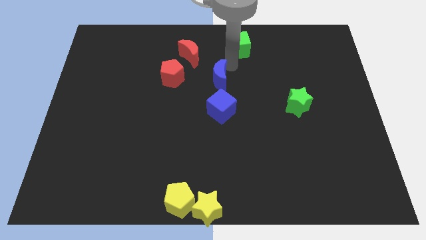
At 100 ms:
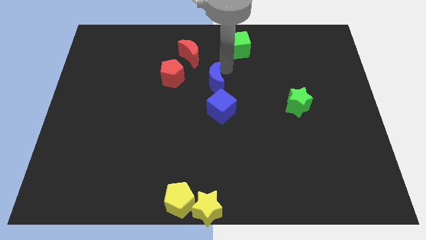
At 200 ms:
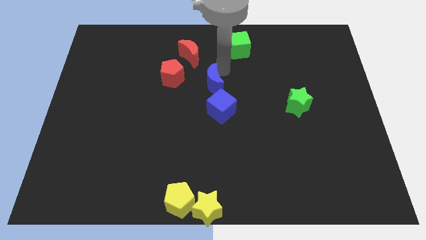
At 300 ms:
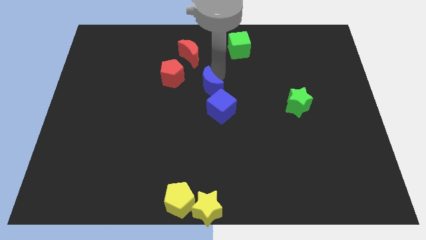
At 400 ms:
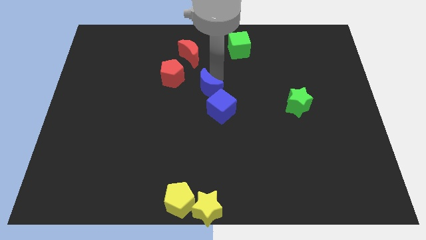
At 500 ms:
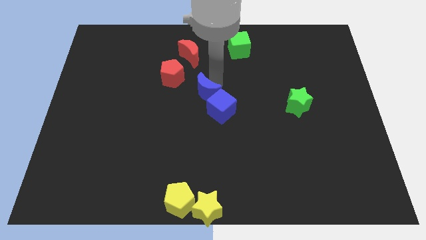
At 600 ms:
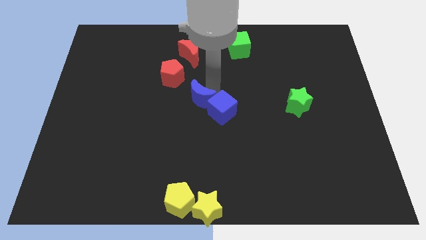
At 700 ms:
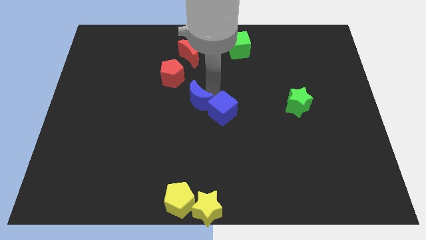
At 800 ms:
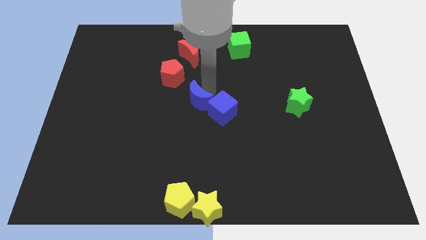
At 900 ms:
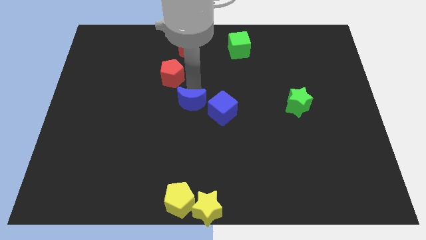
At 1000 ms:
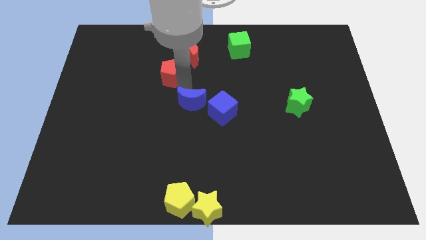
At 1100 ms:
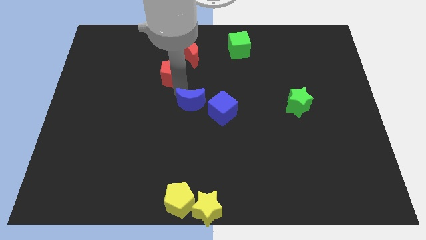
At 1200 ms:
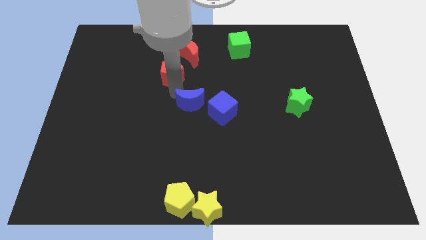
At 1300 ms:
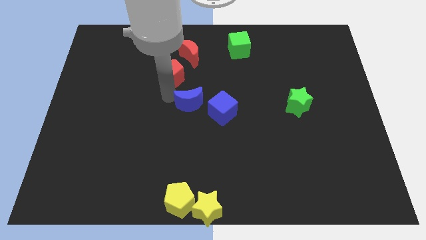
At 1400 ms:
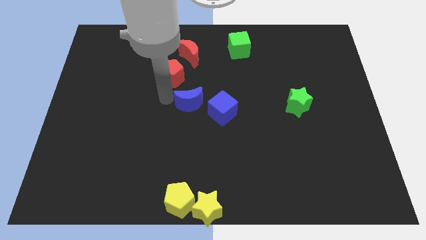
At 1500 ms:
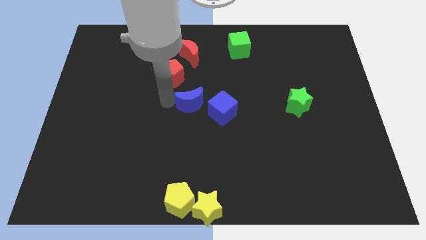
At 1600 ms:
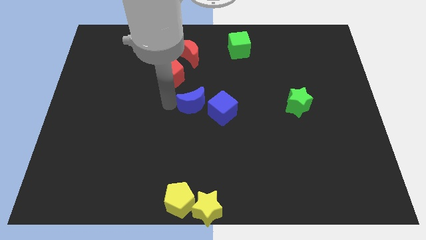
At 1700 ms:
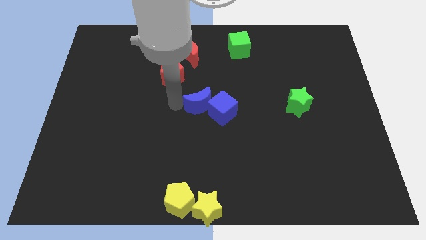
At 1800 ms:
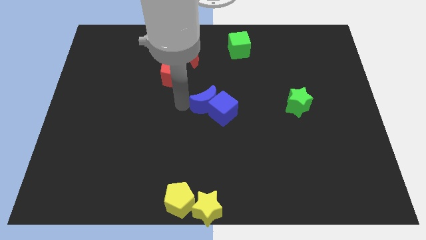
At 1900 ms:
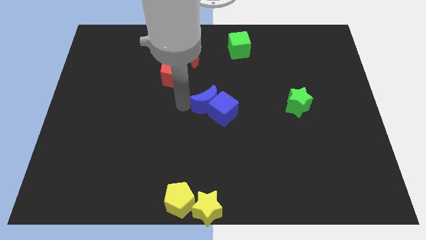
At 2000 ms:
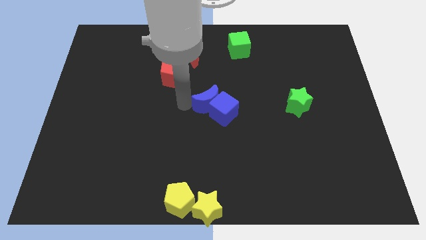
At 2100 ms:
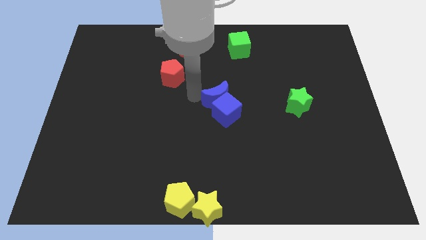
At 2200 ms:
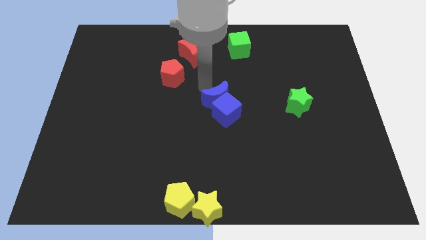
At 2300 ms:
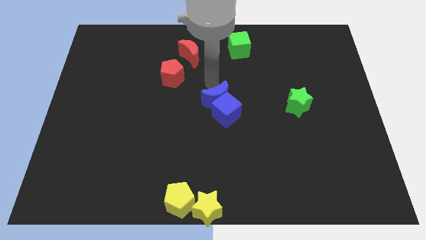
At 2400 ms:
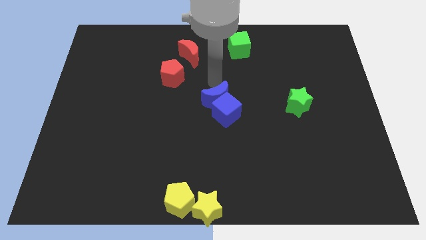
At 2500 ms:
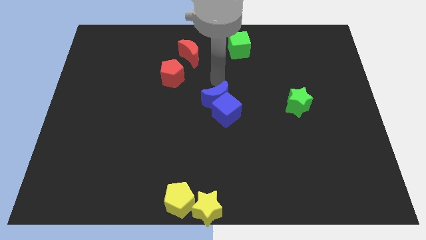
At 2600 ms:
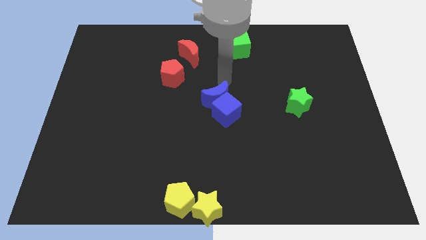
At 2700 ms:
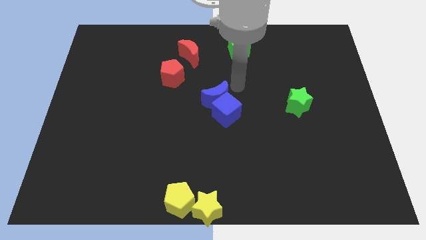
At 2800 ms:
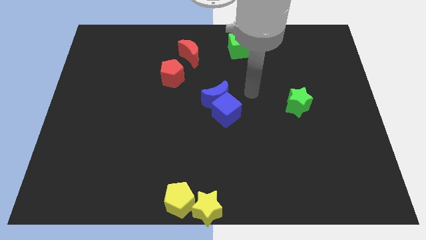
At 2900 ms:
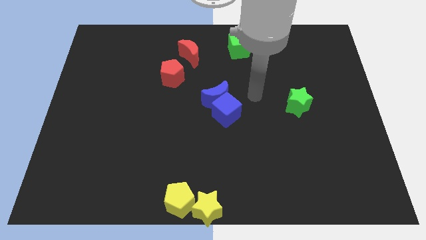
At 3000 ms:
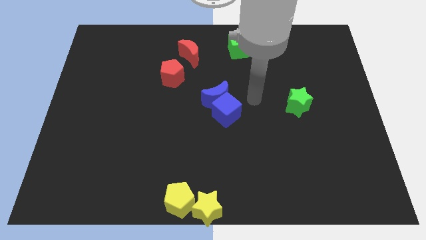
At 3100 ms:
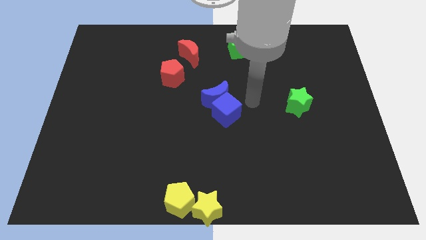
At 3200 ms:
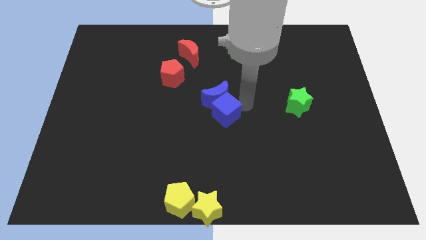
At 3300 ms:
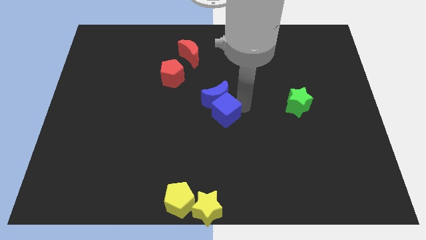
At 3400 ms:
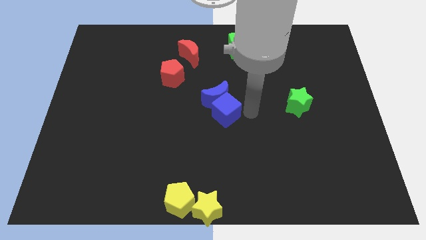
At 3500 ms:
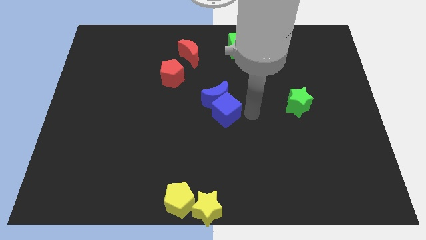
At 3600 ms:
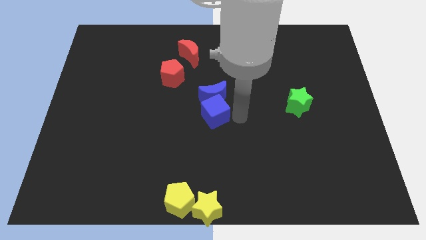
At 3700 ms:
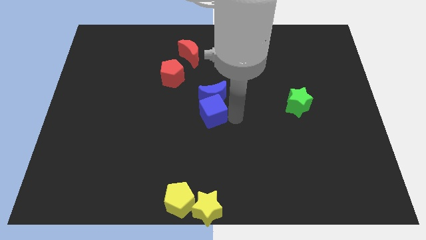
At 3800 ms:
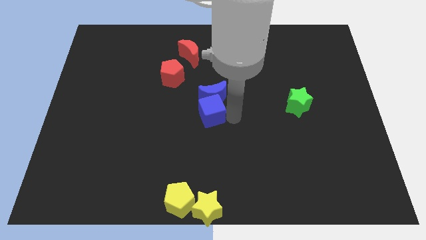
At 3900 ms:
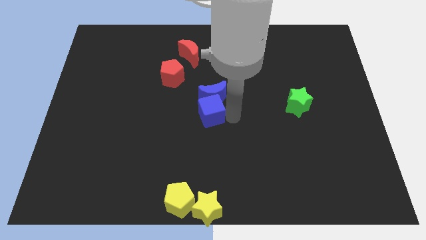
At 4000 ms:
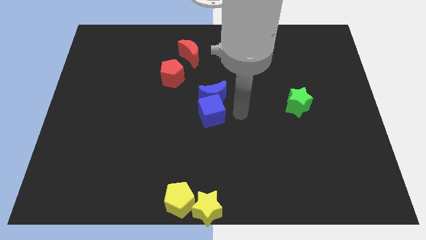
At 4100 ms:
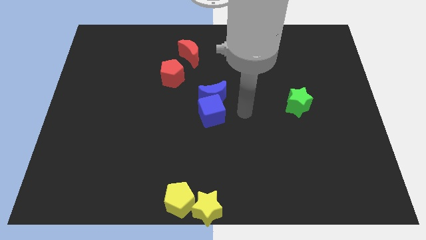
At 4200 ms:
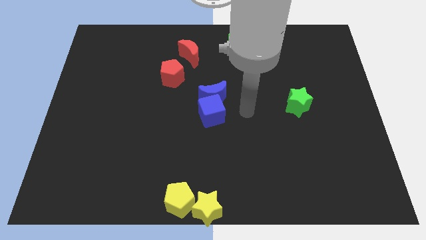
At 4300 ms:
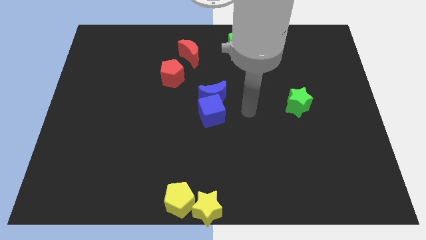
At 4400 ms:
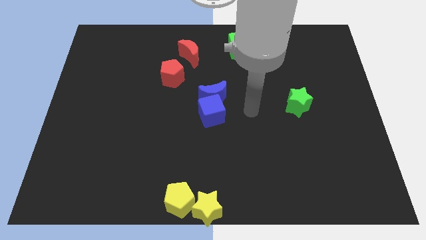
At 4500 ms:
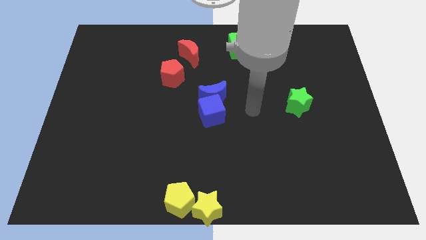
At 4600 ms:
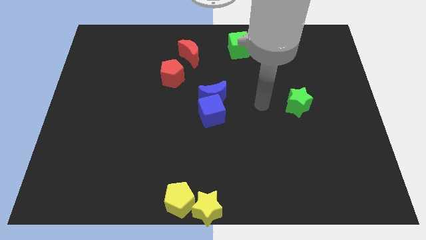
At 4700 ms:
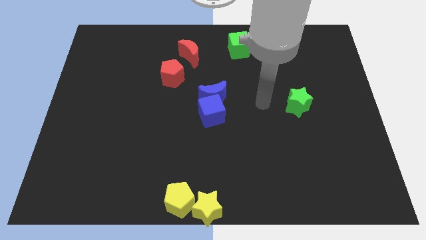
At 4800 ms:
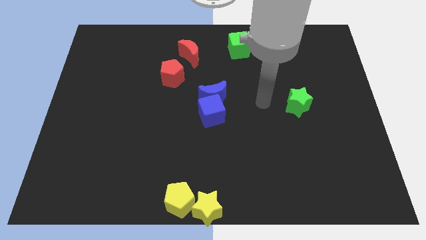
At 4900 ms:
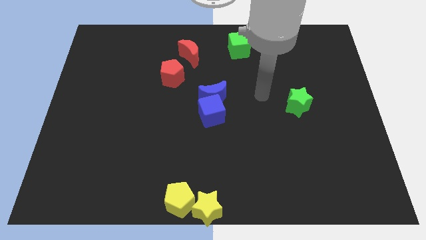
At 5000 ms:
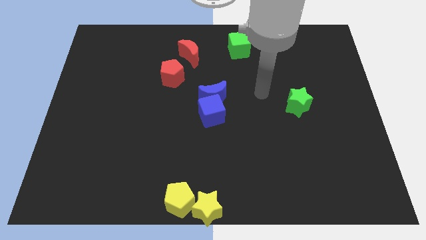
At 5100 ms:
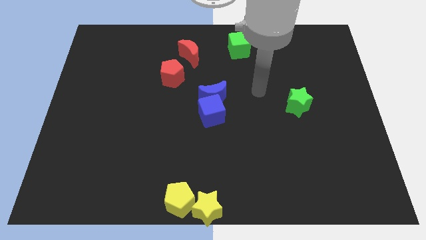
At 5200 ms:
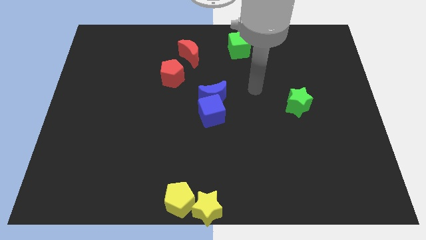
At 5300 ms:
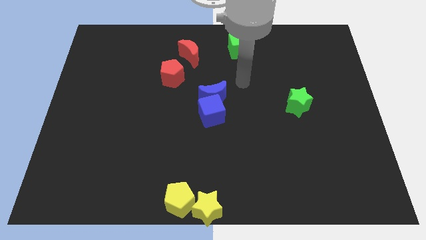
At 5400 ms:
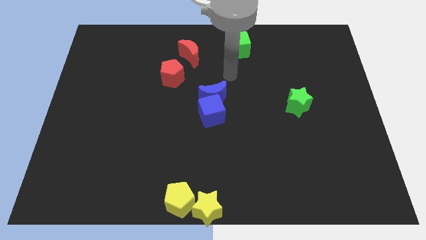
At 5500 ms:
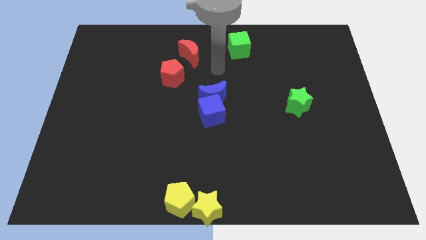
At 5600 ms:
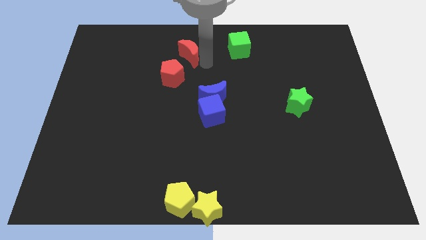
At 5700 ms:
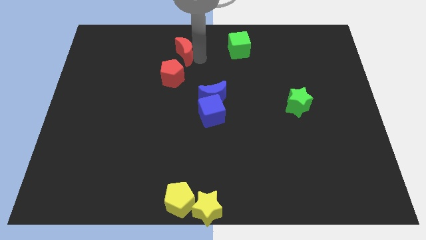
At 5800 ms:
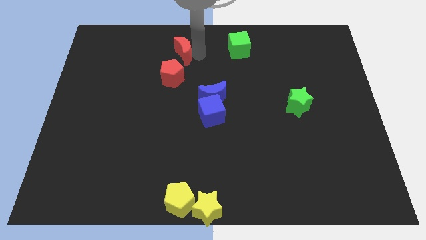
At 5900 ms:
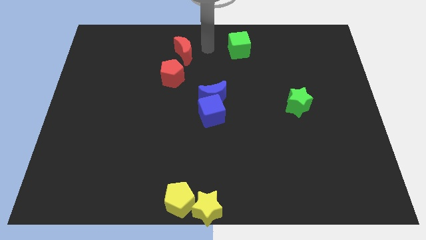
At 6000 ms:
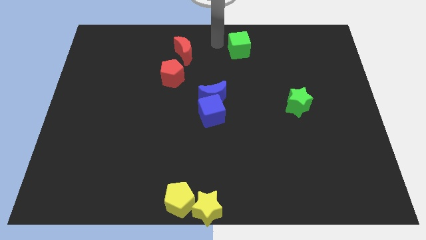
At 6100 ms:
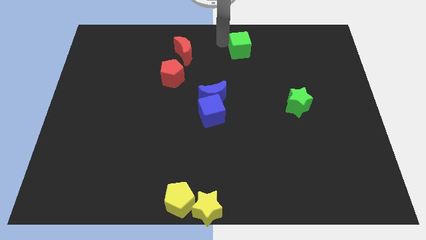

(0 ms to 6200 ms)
move the blue crescent into the blue cube

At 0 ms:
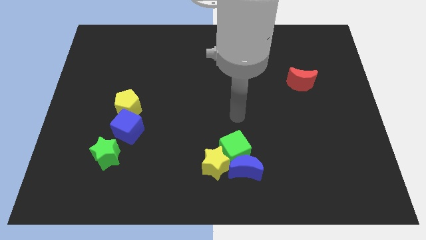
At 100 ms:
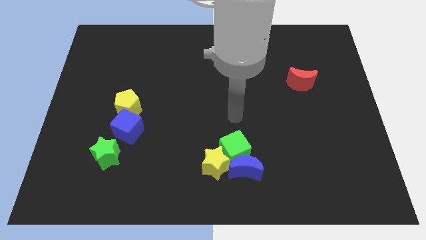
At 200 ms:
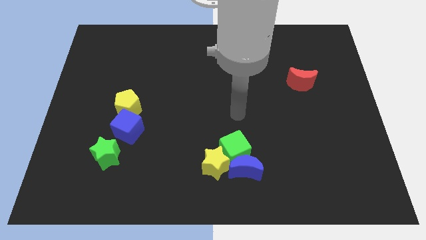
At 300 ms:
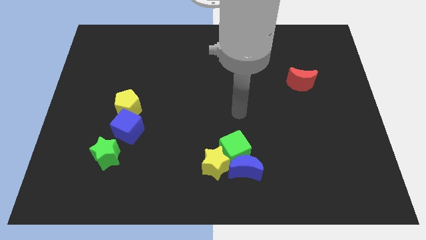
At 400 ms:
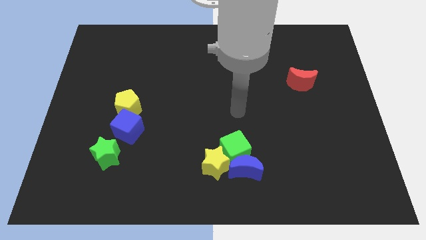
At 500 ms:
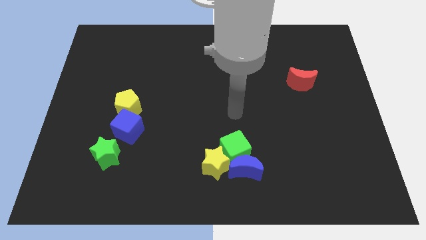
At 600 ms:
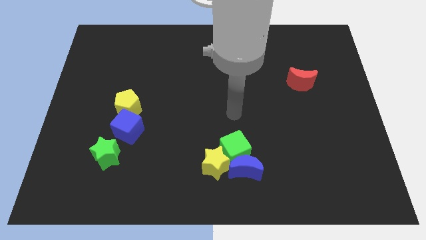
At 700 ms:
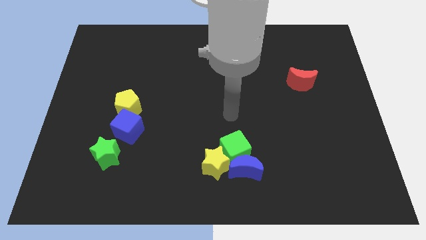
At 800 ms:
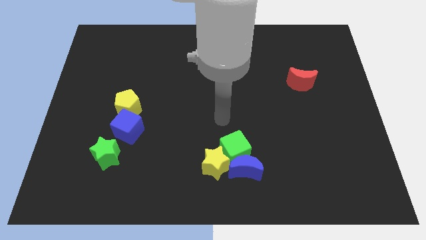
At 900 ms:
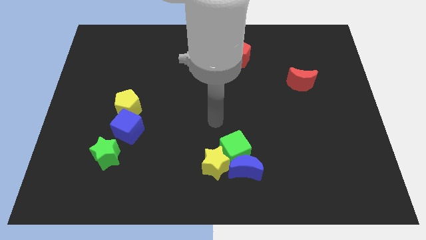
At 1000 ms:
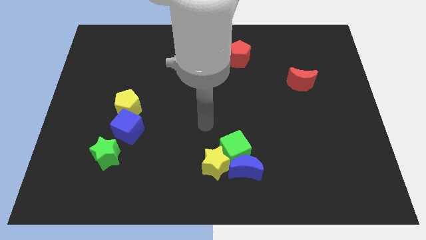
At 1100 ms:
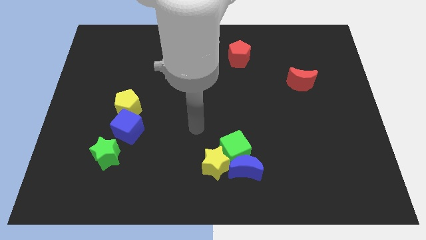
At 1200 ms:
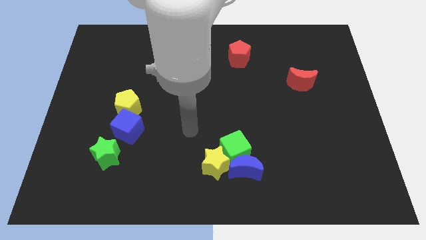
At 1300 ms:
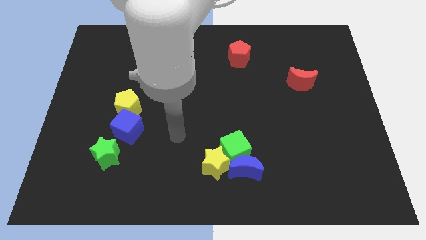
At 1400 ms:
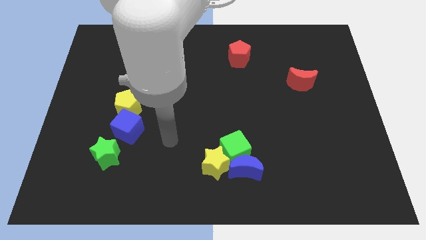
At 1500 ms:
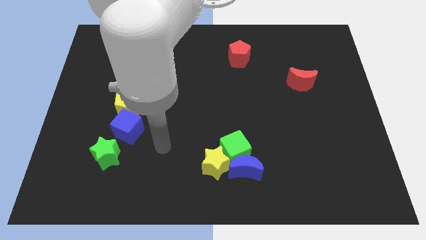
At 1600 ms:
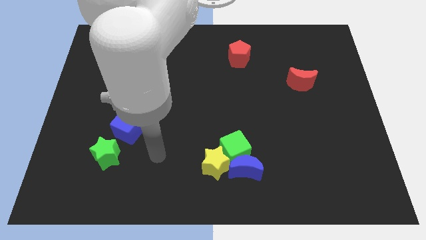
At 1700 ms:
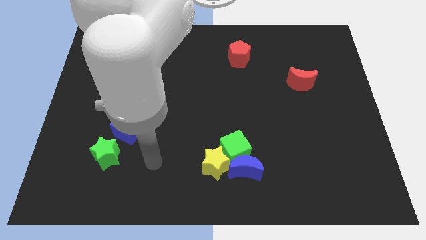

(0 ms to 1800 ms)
place your arm in between the green star and yellow star

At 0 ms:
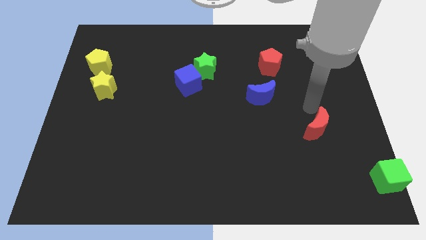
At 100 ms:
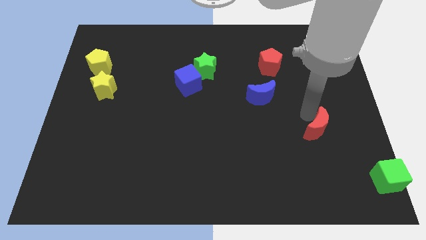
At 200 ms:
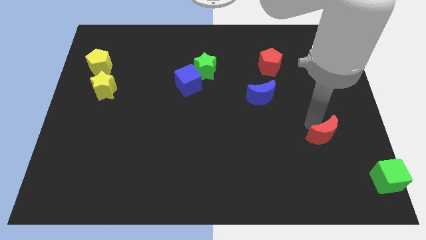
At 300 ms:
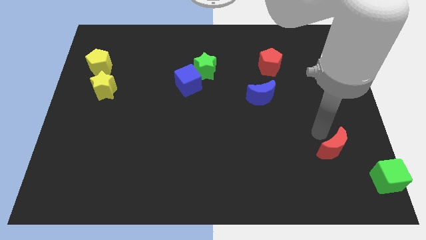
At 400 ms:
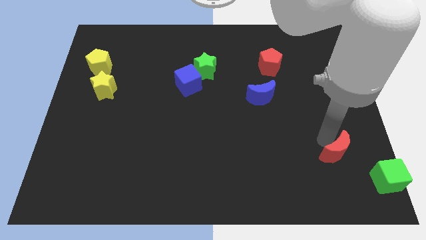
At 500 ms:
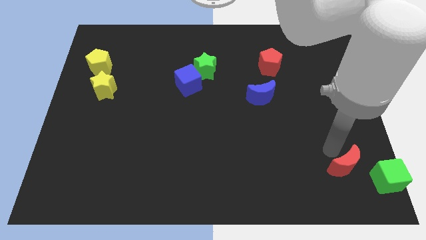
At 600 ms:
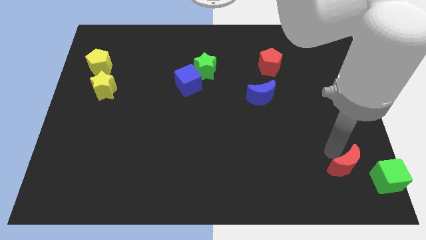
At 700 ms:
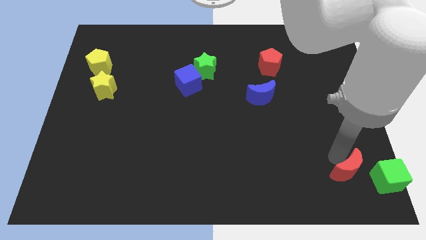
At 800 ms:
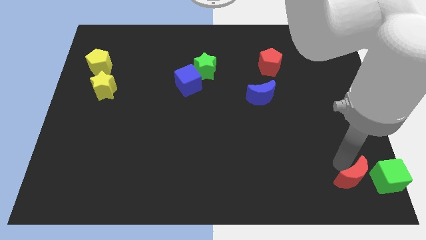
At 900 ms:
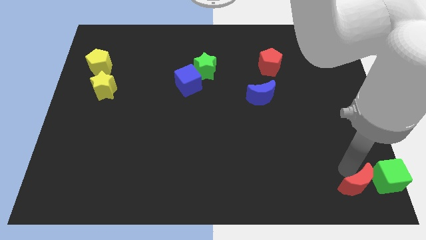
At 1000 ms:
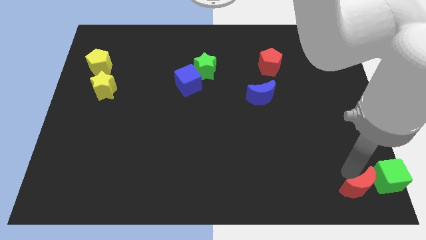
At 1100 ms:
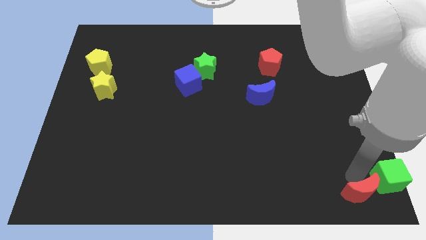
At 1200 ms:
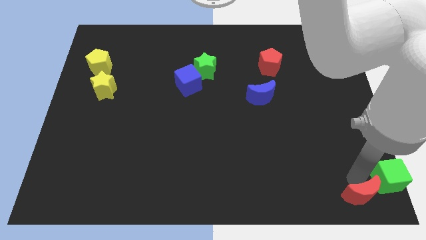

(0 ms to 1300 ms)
move the red crescent left to the green cube
